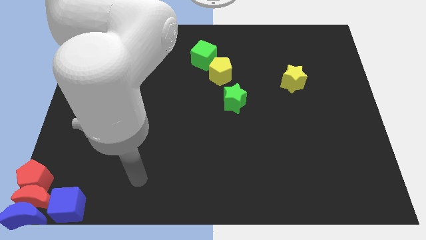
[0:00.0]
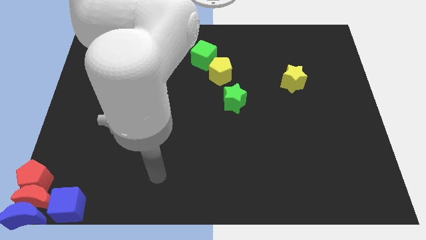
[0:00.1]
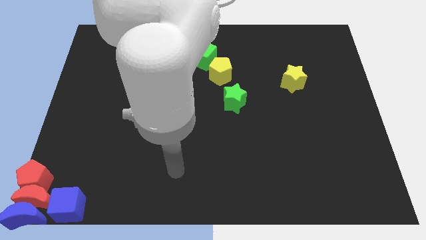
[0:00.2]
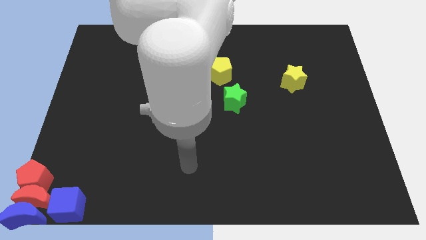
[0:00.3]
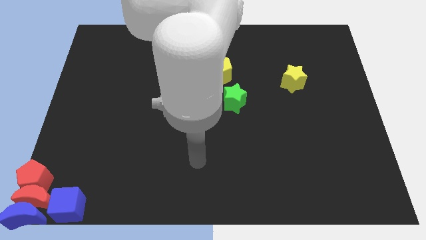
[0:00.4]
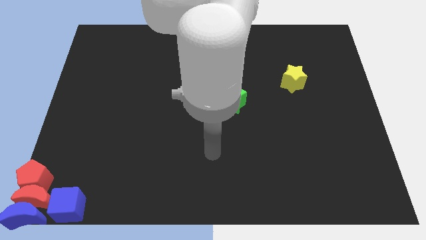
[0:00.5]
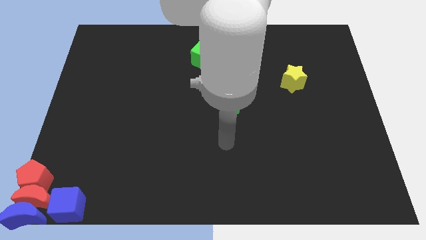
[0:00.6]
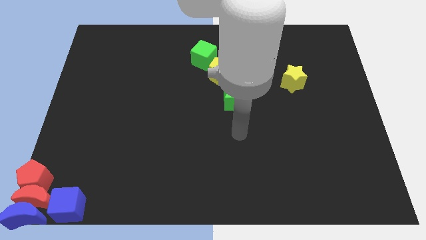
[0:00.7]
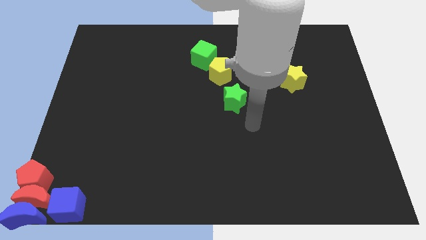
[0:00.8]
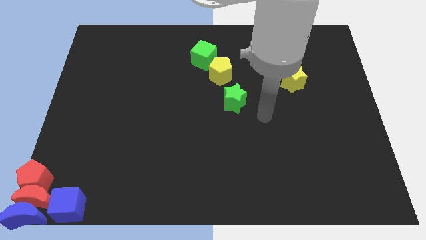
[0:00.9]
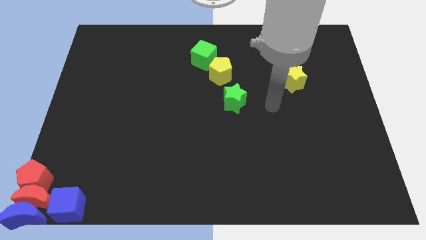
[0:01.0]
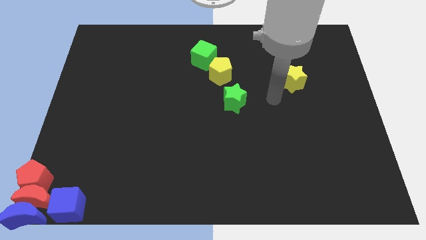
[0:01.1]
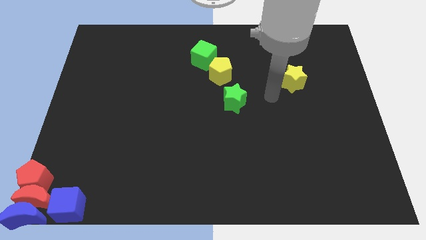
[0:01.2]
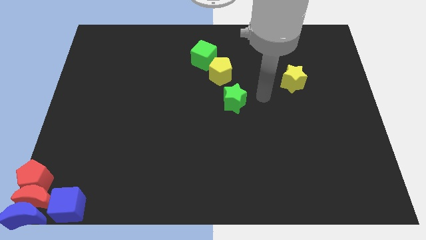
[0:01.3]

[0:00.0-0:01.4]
move your hand towards the right of the green star

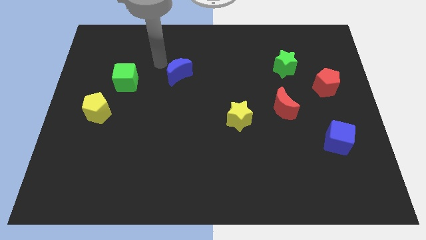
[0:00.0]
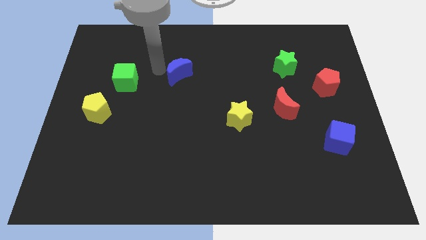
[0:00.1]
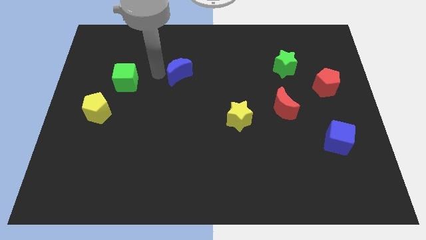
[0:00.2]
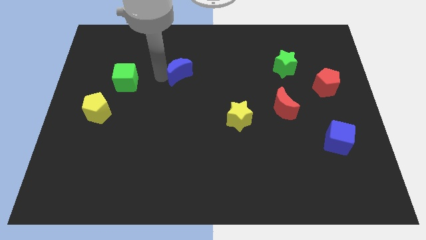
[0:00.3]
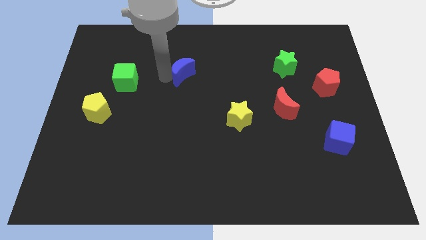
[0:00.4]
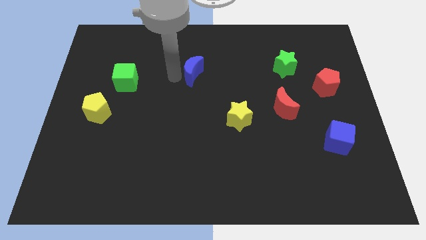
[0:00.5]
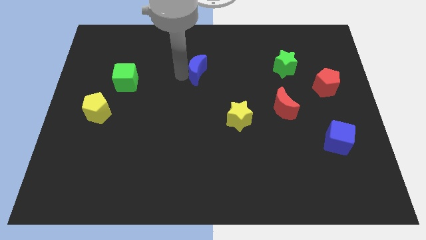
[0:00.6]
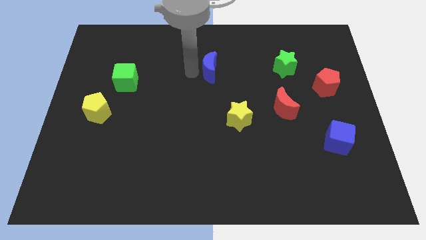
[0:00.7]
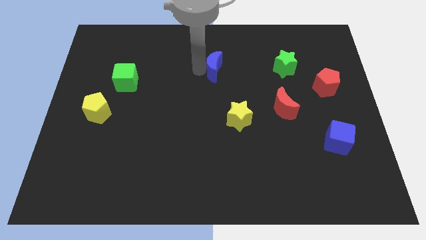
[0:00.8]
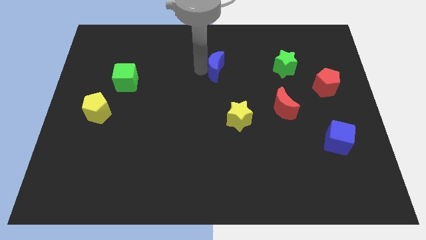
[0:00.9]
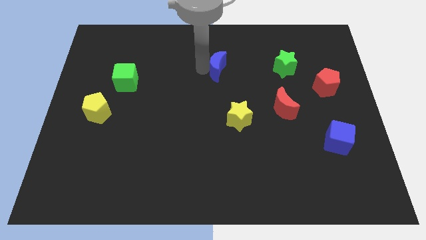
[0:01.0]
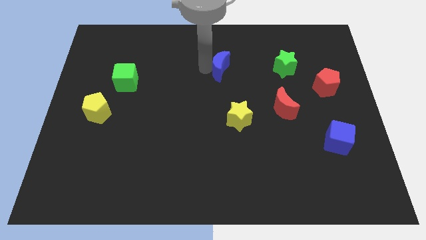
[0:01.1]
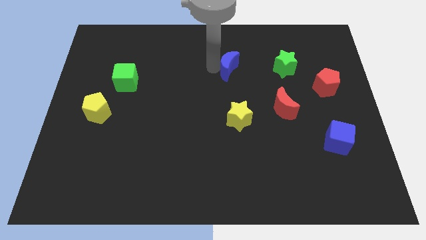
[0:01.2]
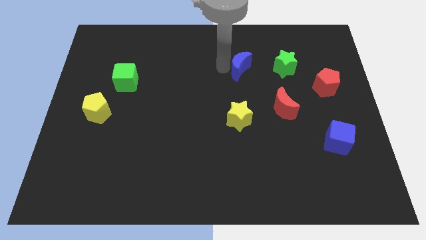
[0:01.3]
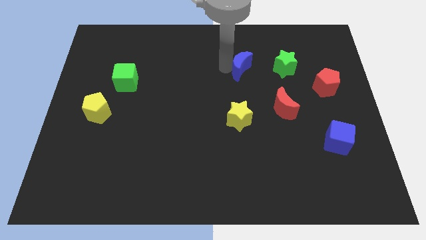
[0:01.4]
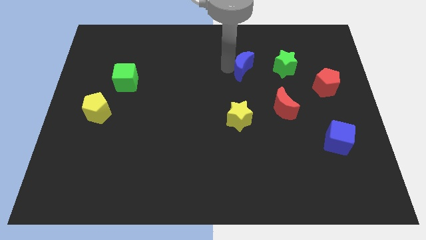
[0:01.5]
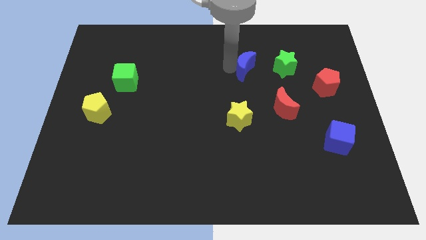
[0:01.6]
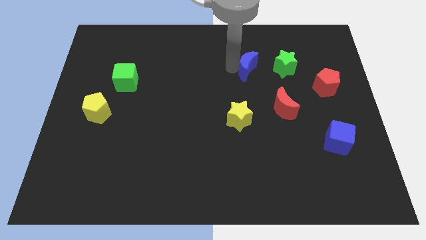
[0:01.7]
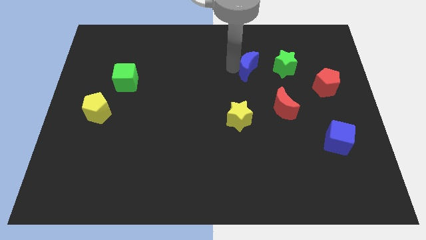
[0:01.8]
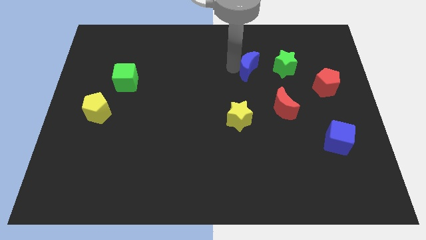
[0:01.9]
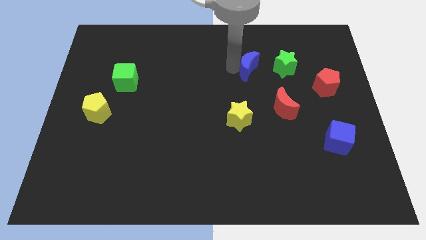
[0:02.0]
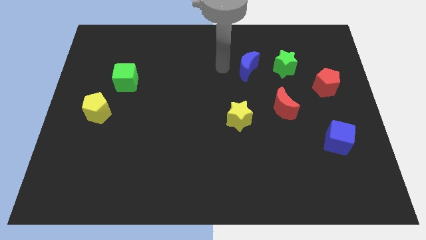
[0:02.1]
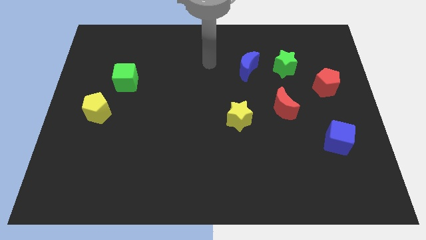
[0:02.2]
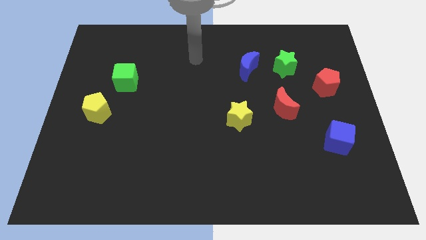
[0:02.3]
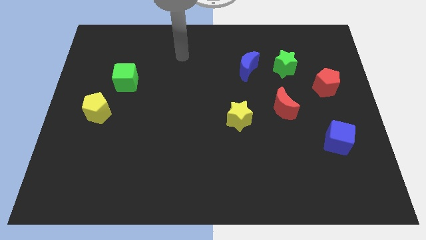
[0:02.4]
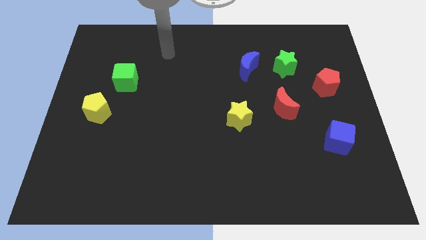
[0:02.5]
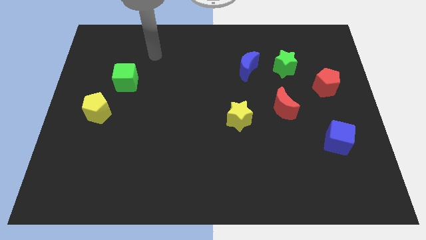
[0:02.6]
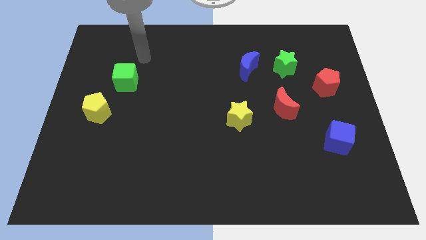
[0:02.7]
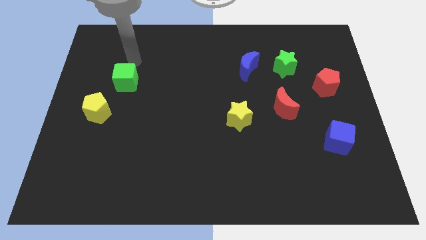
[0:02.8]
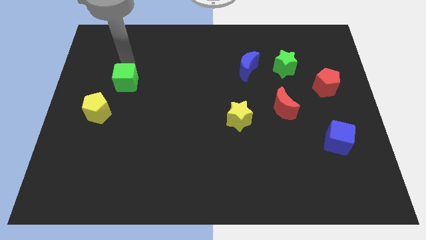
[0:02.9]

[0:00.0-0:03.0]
move blue moon near to green star

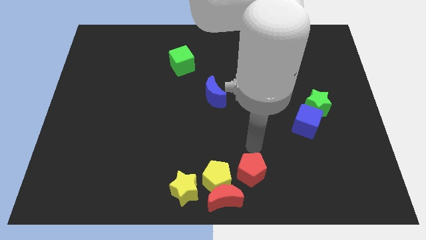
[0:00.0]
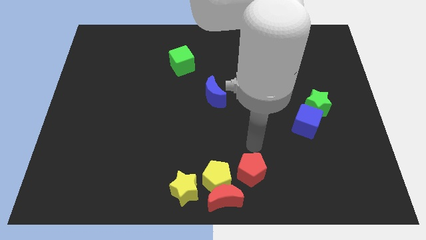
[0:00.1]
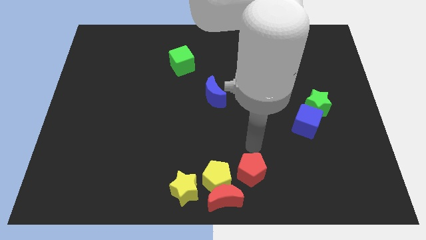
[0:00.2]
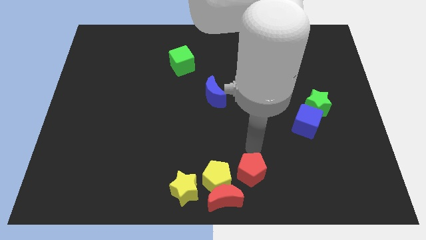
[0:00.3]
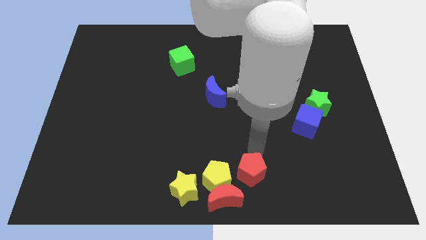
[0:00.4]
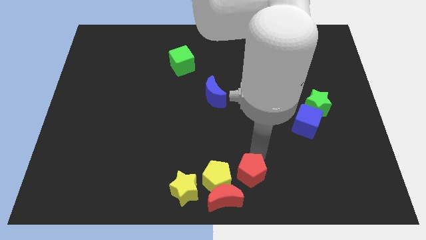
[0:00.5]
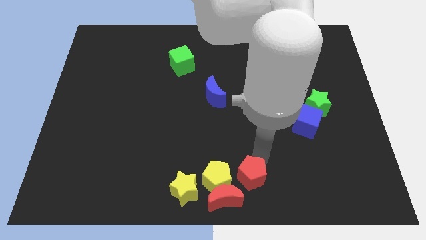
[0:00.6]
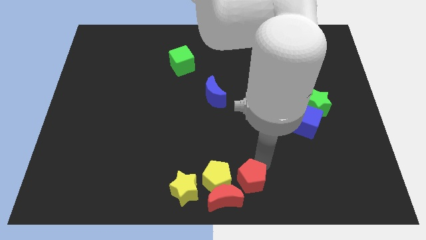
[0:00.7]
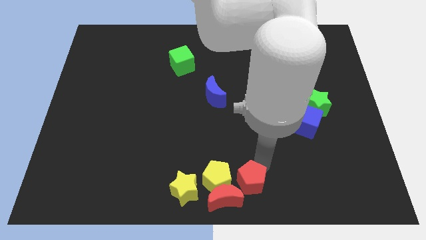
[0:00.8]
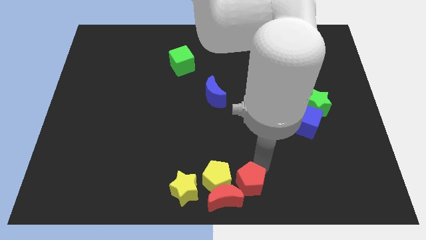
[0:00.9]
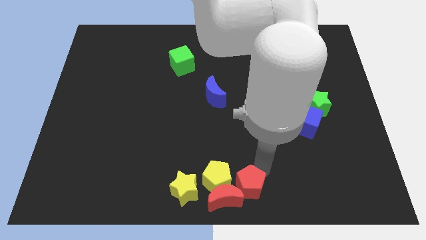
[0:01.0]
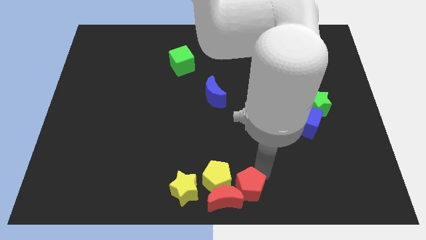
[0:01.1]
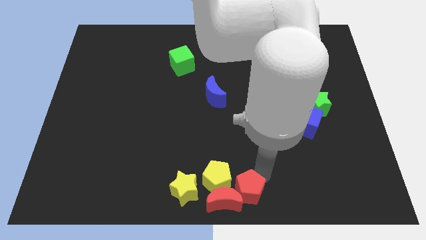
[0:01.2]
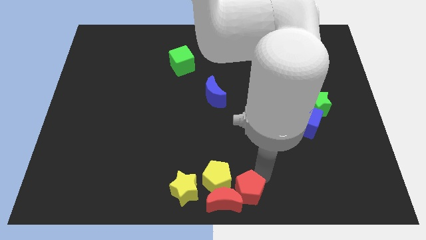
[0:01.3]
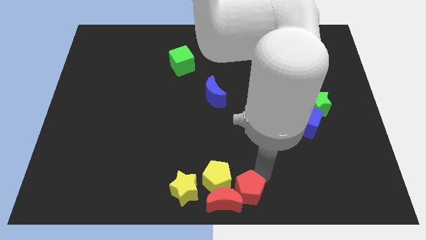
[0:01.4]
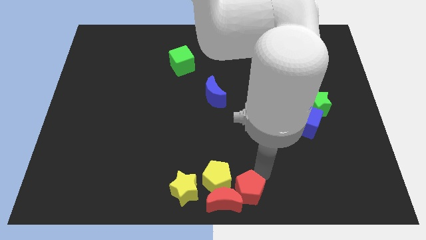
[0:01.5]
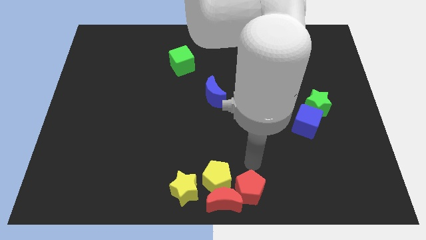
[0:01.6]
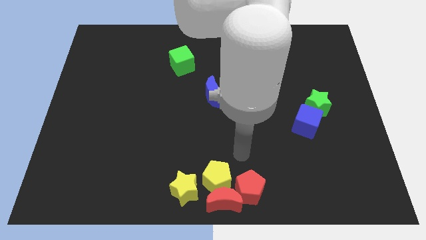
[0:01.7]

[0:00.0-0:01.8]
push the red pentagon into the red crescent

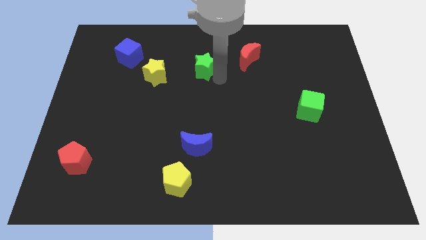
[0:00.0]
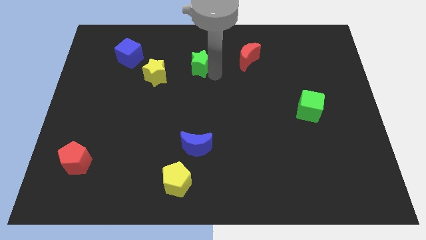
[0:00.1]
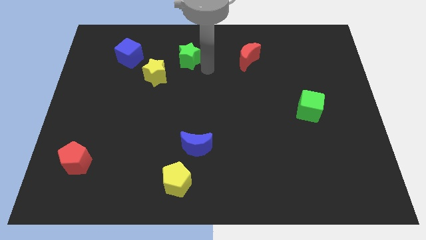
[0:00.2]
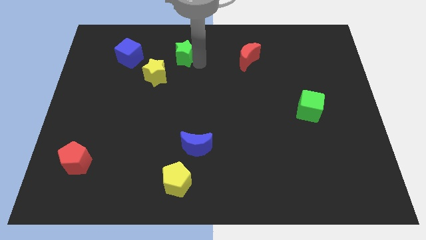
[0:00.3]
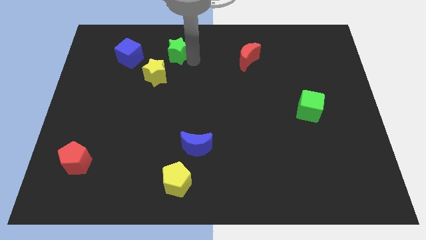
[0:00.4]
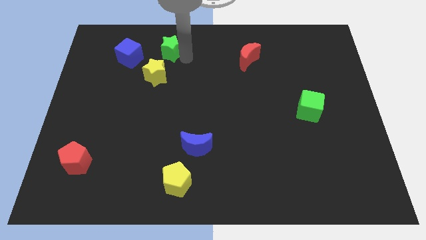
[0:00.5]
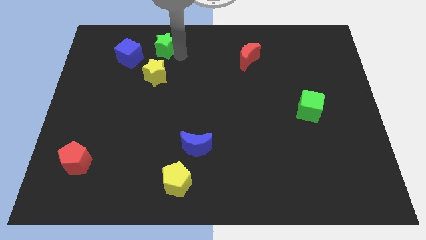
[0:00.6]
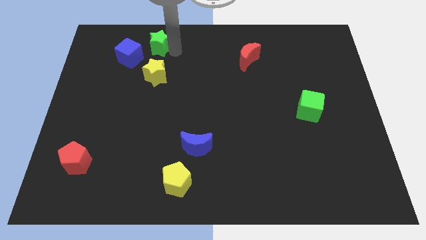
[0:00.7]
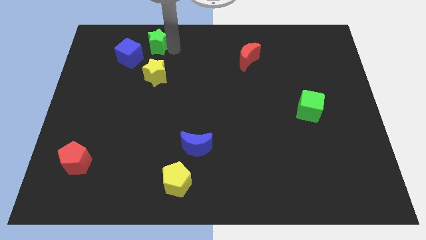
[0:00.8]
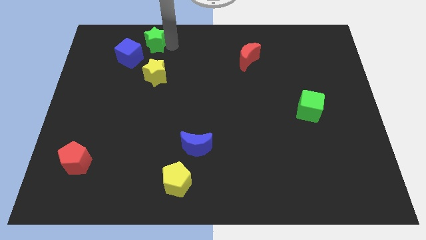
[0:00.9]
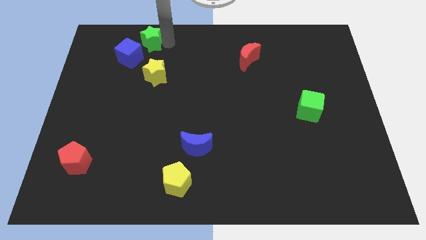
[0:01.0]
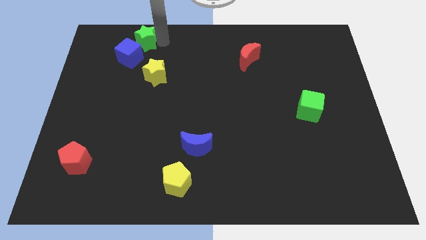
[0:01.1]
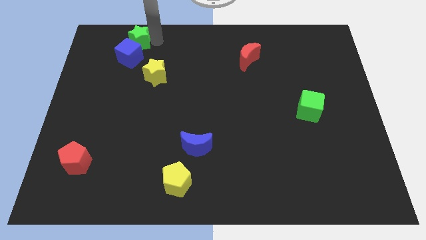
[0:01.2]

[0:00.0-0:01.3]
move the green star to the top of the blue cube

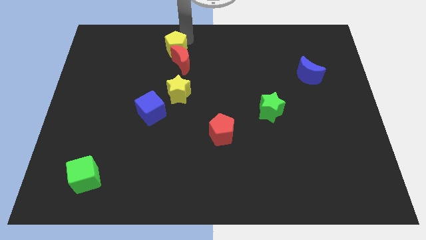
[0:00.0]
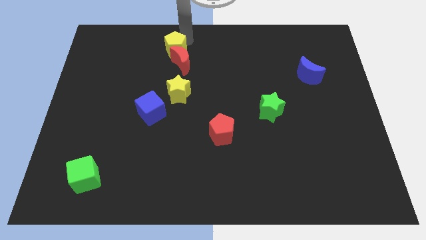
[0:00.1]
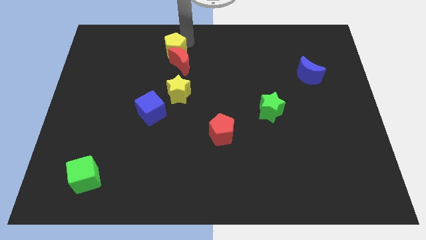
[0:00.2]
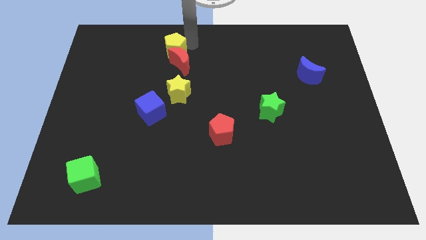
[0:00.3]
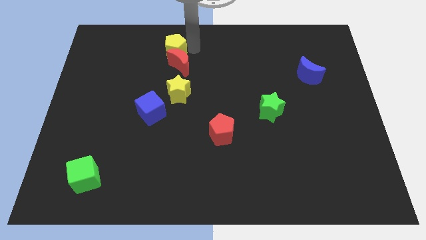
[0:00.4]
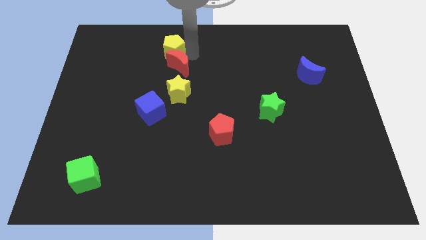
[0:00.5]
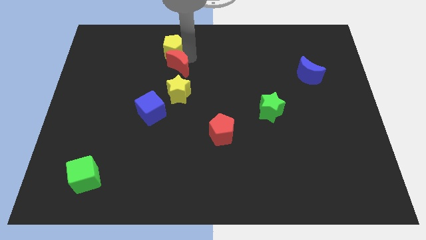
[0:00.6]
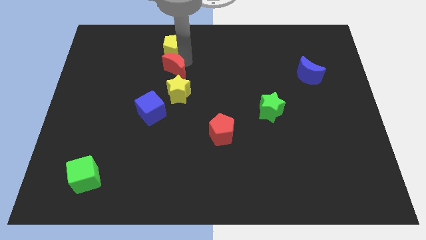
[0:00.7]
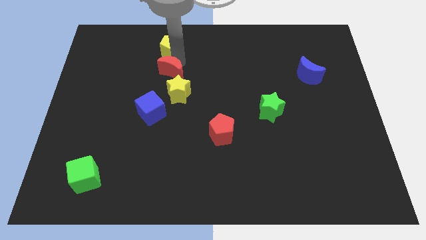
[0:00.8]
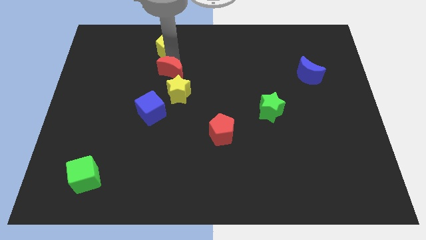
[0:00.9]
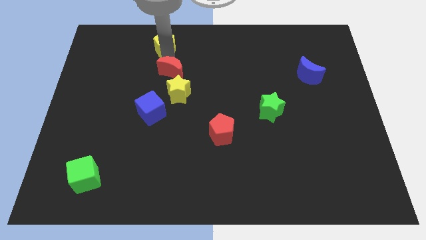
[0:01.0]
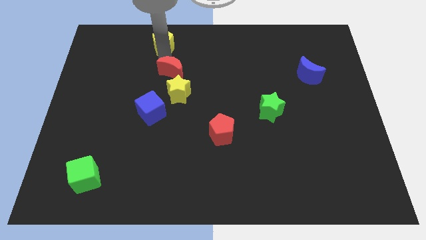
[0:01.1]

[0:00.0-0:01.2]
separate red moon from yellow pentagon

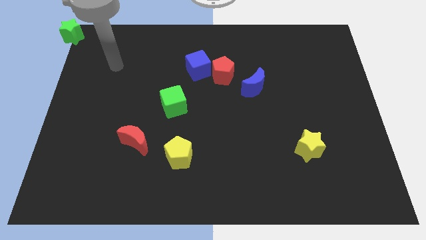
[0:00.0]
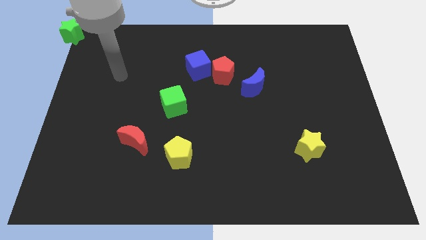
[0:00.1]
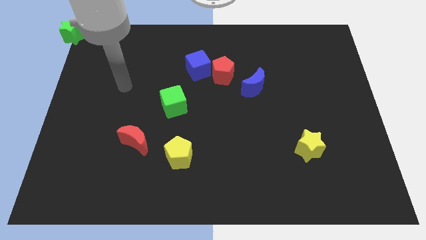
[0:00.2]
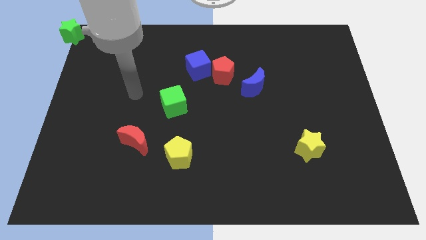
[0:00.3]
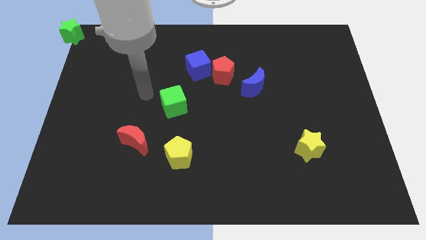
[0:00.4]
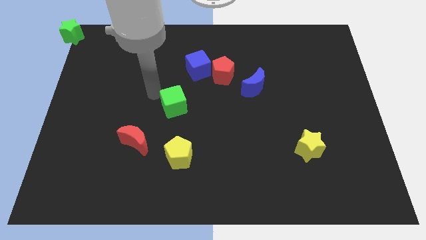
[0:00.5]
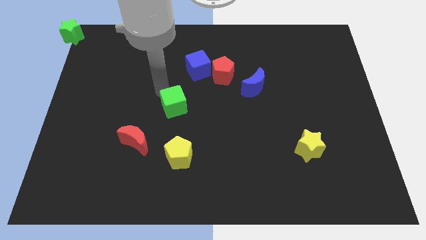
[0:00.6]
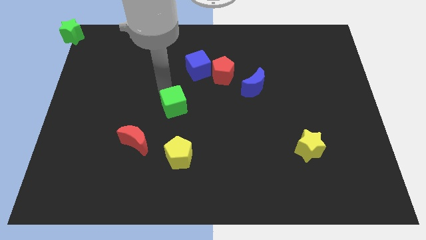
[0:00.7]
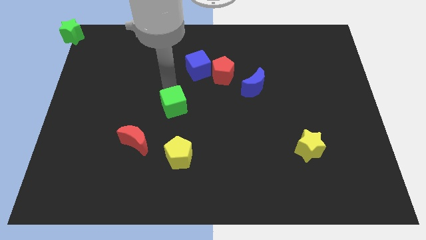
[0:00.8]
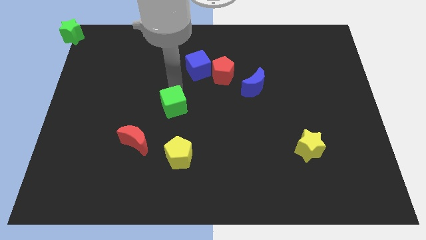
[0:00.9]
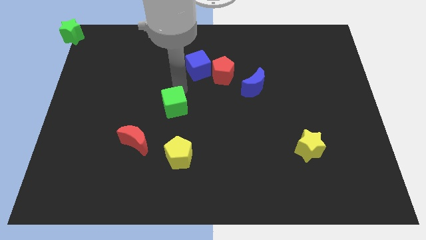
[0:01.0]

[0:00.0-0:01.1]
touch the top side of the green cube
